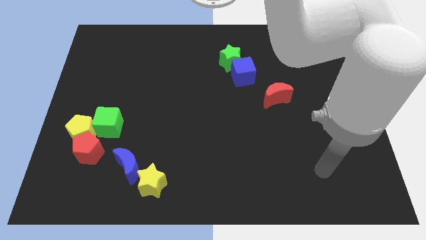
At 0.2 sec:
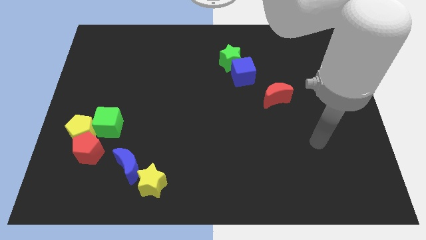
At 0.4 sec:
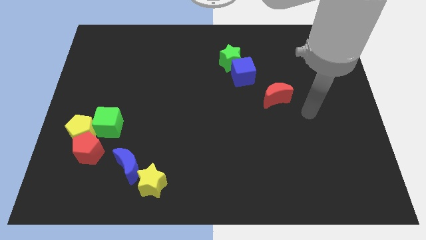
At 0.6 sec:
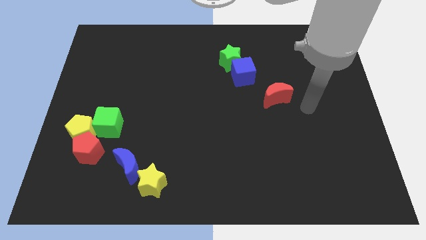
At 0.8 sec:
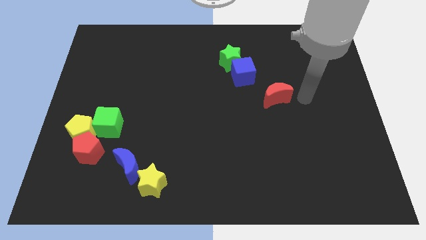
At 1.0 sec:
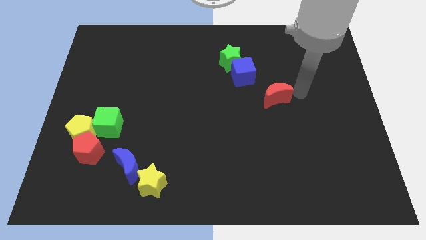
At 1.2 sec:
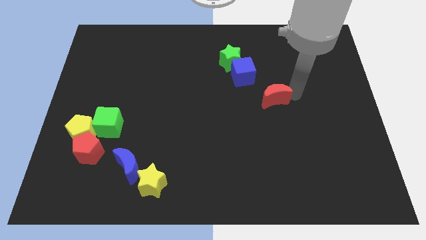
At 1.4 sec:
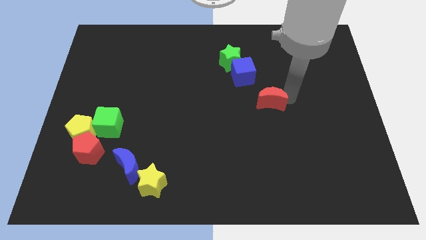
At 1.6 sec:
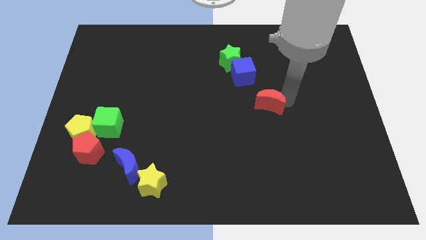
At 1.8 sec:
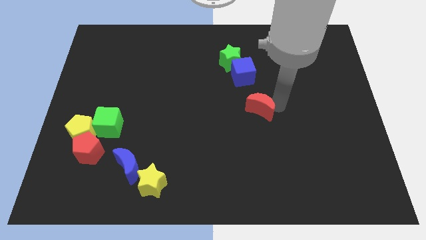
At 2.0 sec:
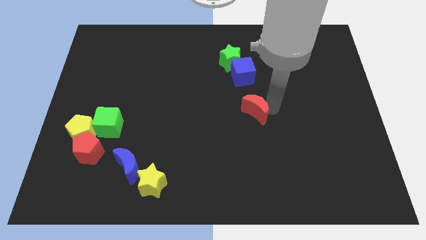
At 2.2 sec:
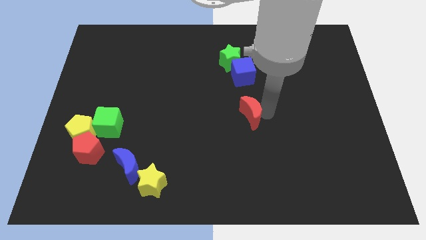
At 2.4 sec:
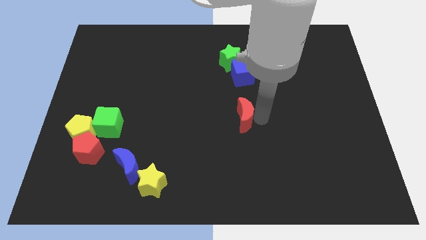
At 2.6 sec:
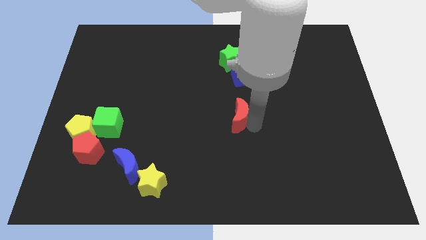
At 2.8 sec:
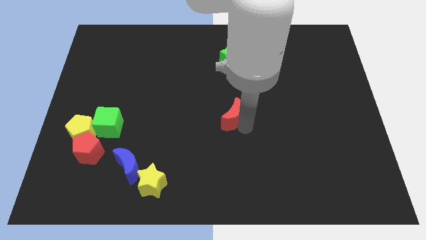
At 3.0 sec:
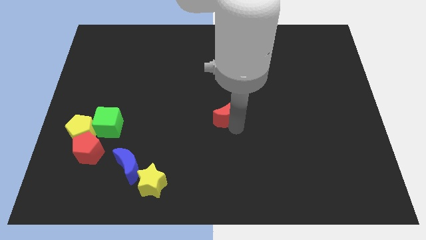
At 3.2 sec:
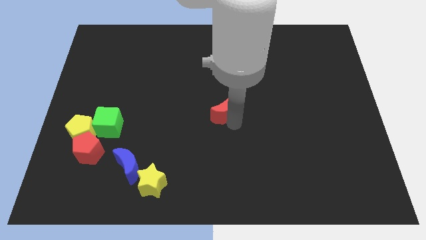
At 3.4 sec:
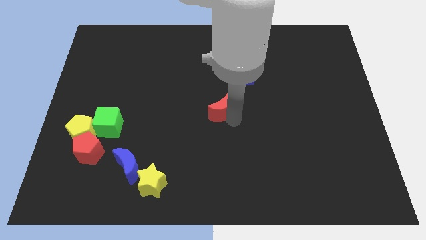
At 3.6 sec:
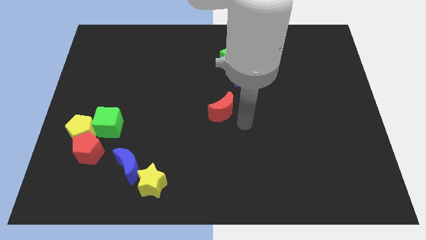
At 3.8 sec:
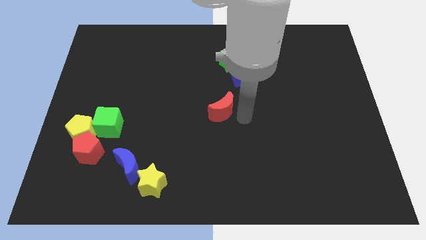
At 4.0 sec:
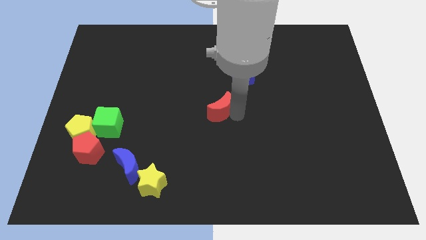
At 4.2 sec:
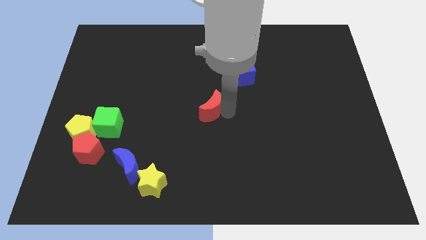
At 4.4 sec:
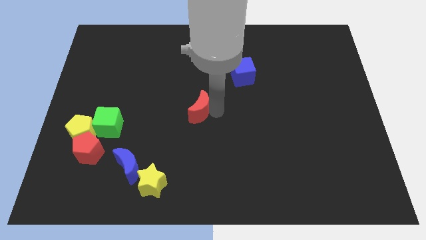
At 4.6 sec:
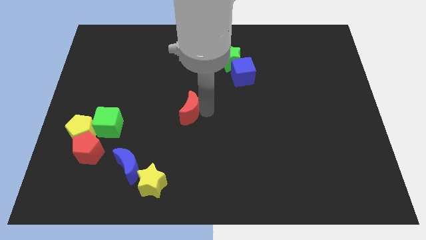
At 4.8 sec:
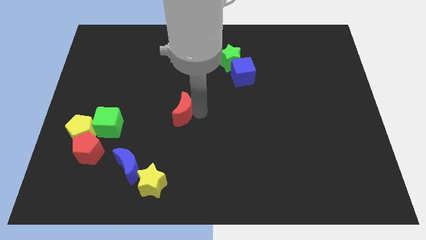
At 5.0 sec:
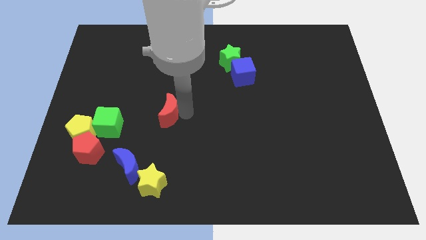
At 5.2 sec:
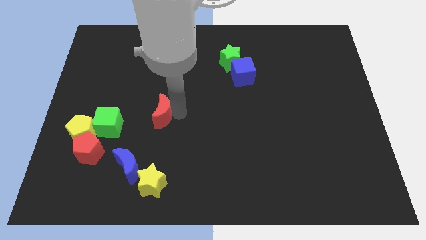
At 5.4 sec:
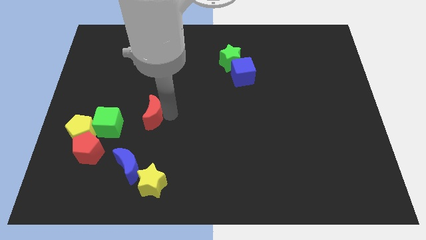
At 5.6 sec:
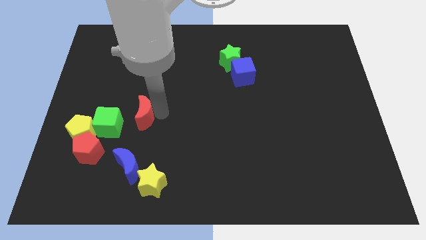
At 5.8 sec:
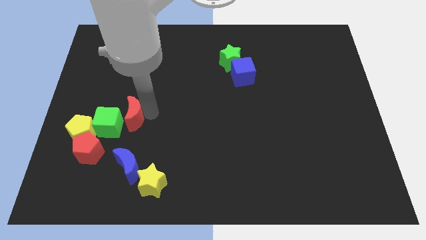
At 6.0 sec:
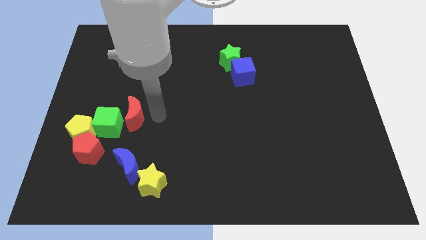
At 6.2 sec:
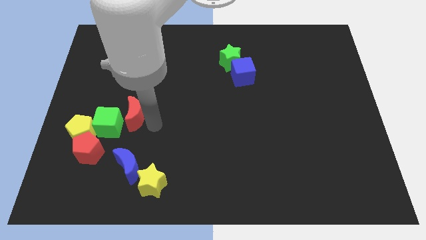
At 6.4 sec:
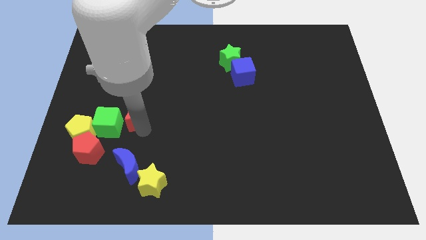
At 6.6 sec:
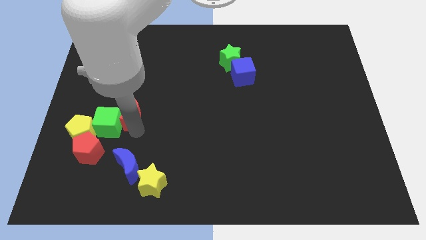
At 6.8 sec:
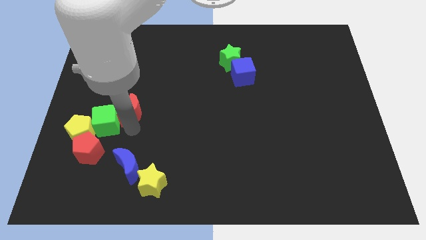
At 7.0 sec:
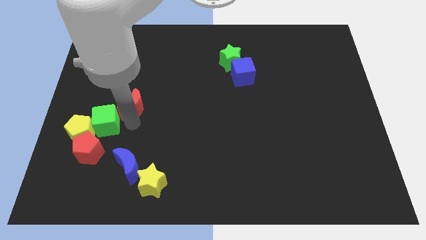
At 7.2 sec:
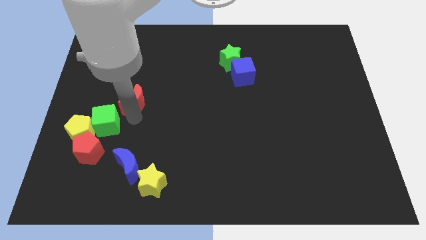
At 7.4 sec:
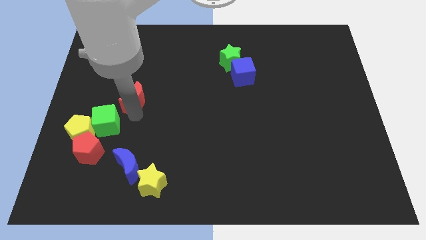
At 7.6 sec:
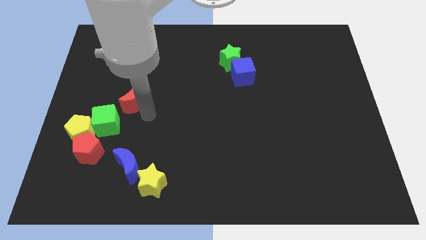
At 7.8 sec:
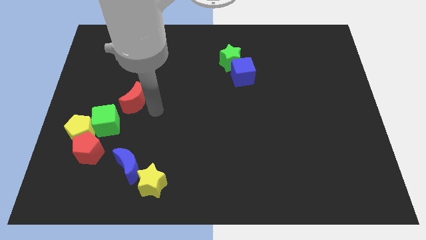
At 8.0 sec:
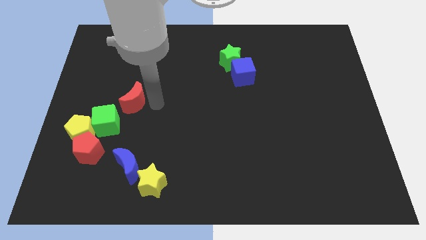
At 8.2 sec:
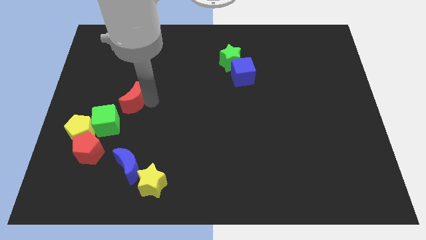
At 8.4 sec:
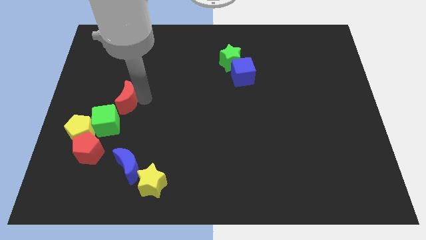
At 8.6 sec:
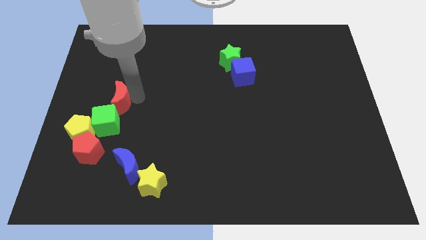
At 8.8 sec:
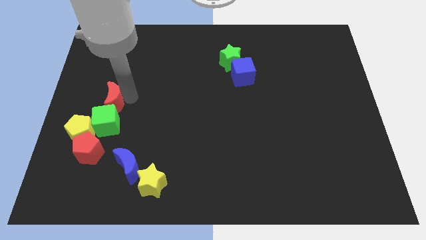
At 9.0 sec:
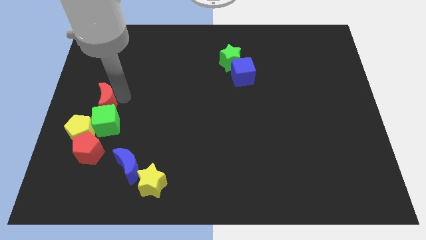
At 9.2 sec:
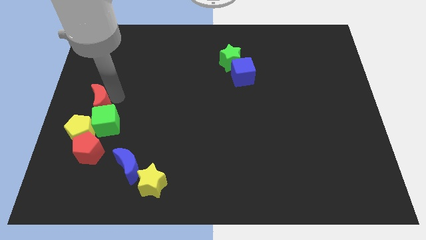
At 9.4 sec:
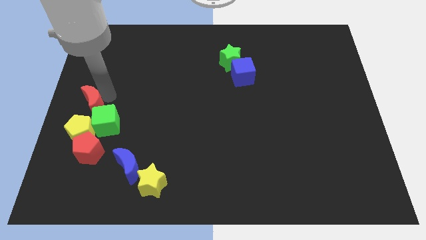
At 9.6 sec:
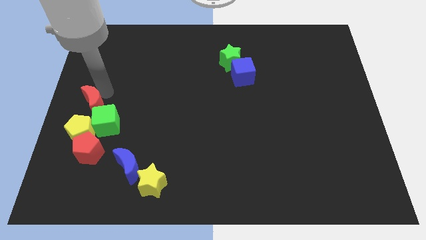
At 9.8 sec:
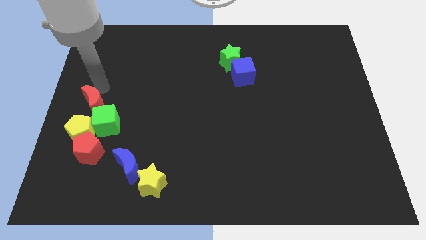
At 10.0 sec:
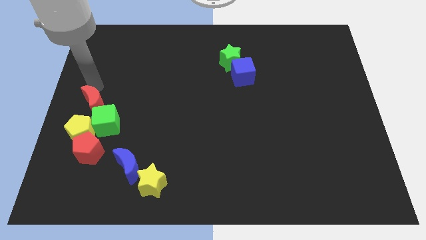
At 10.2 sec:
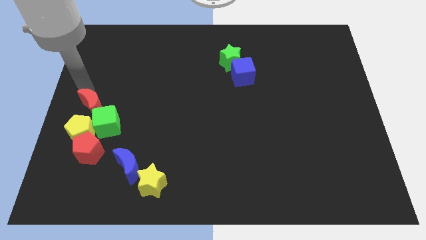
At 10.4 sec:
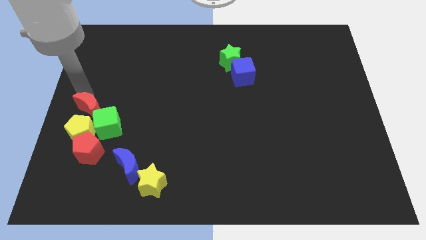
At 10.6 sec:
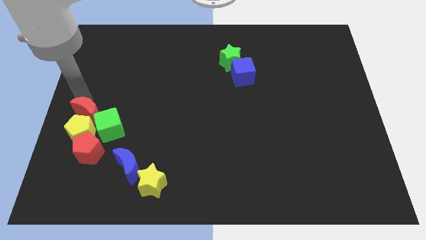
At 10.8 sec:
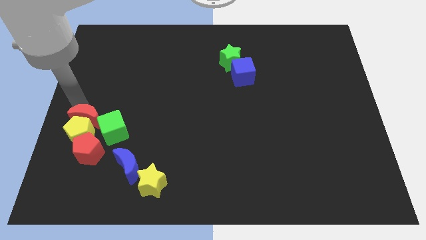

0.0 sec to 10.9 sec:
push the red moon close to the yellow pentagon

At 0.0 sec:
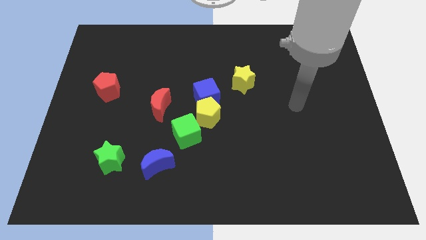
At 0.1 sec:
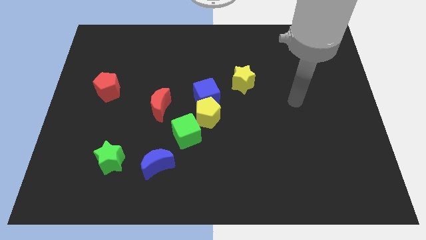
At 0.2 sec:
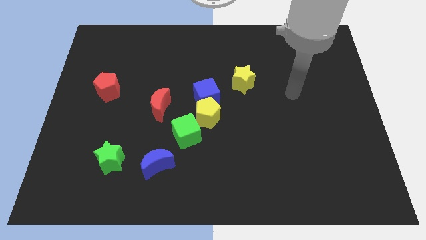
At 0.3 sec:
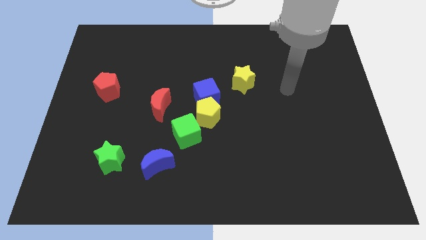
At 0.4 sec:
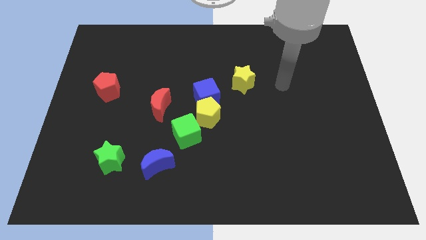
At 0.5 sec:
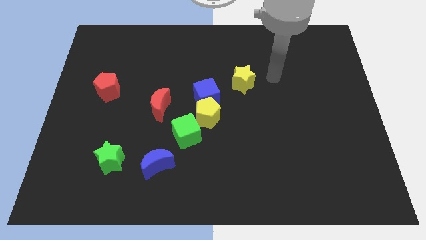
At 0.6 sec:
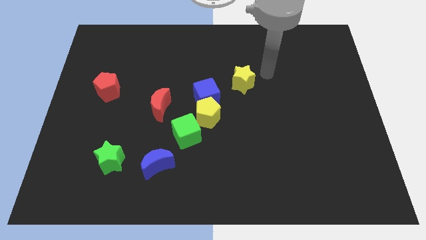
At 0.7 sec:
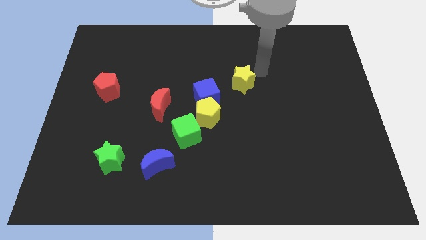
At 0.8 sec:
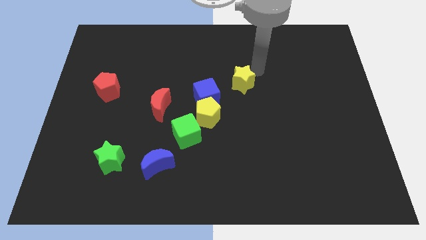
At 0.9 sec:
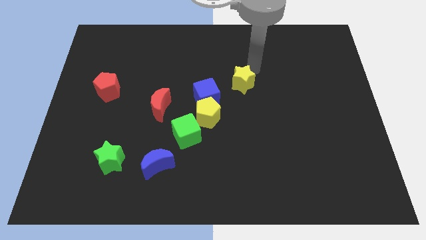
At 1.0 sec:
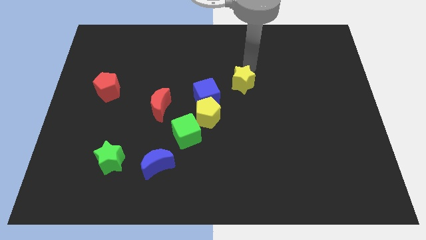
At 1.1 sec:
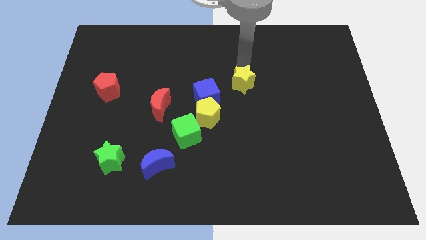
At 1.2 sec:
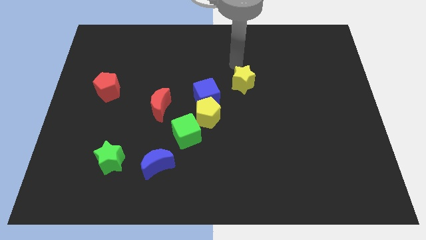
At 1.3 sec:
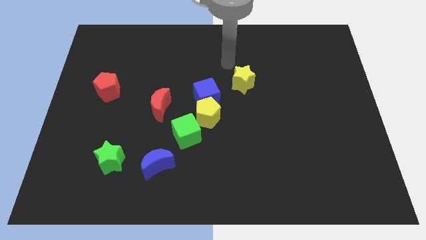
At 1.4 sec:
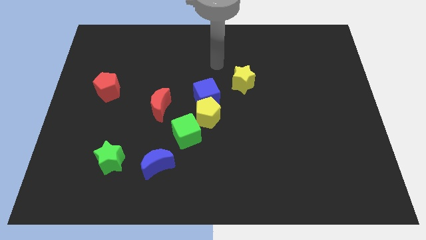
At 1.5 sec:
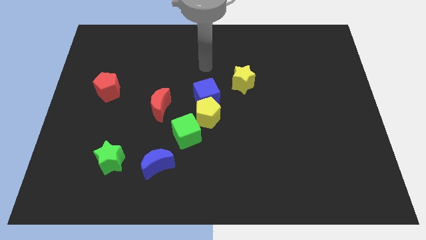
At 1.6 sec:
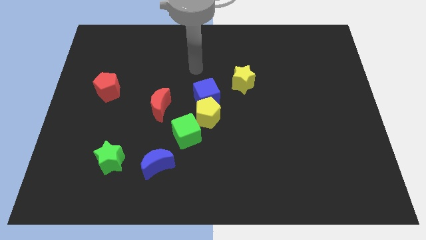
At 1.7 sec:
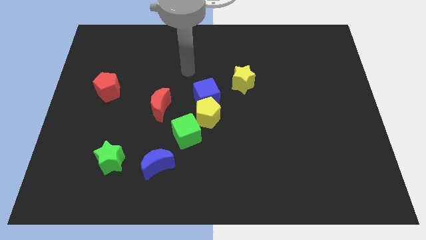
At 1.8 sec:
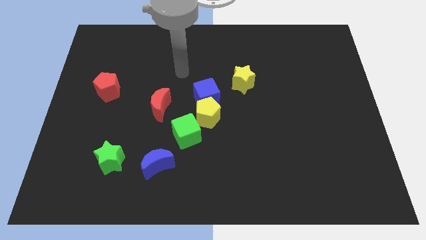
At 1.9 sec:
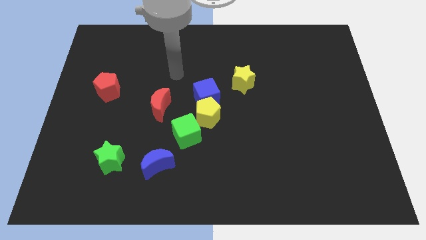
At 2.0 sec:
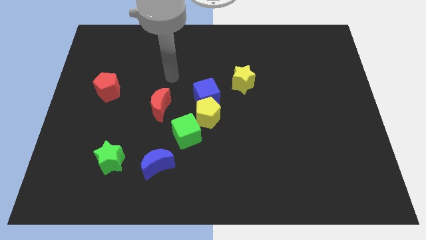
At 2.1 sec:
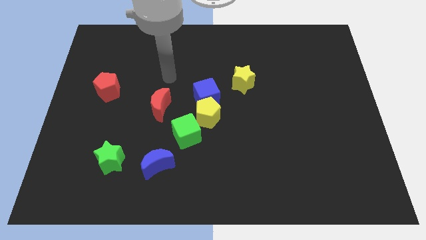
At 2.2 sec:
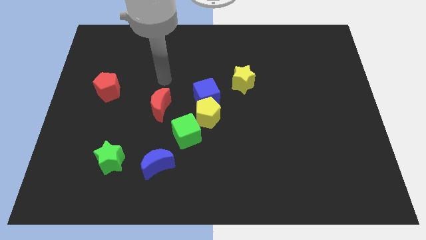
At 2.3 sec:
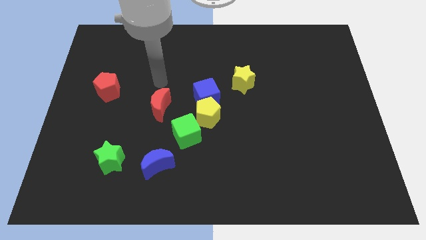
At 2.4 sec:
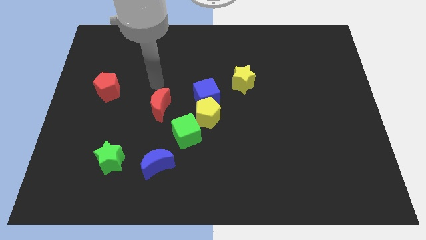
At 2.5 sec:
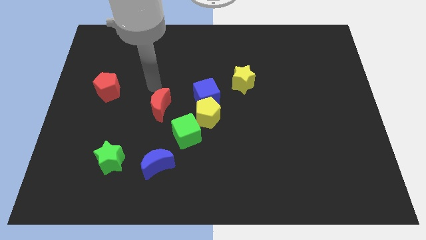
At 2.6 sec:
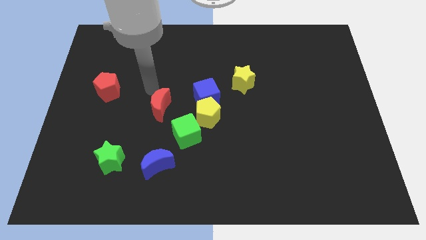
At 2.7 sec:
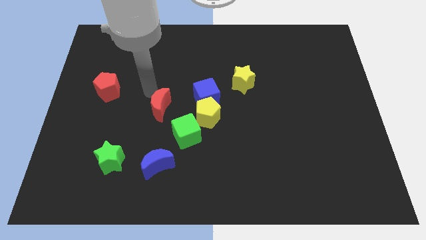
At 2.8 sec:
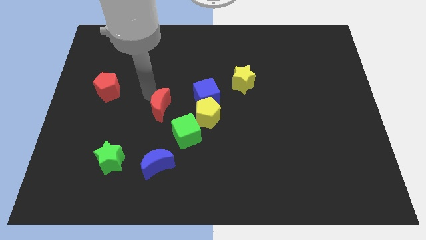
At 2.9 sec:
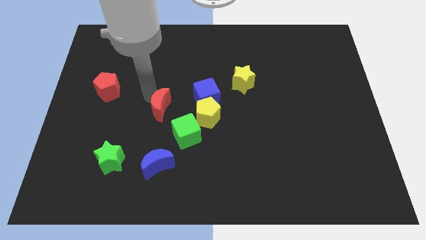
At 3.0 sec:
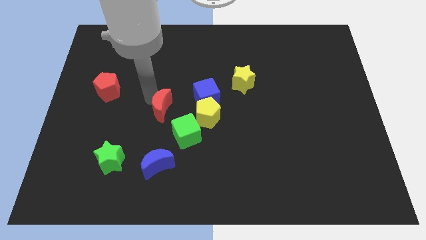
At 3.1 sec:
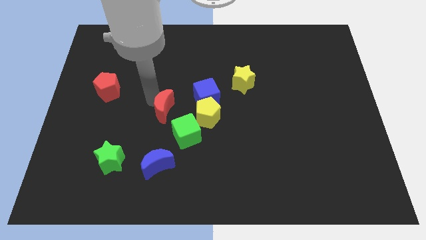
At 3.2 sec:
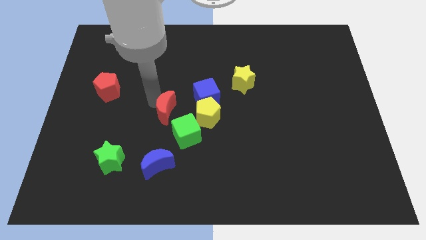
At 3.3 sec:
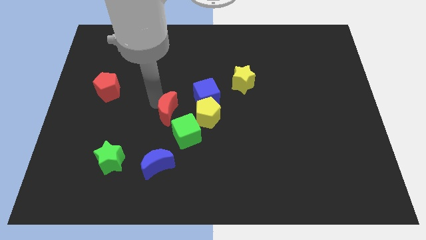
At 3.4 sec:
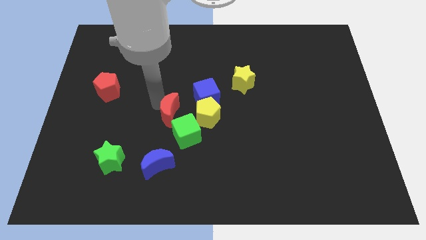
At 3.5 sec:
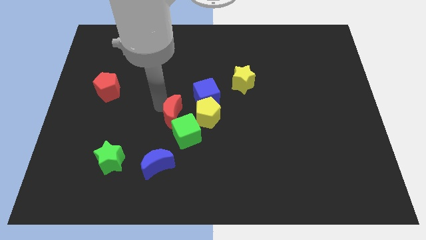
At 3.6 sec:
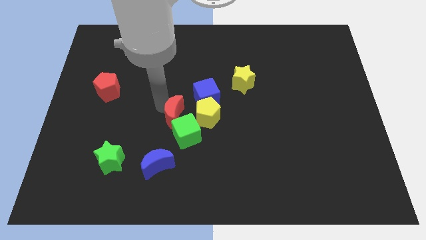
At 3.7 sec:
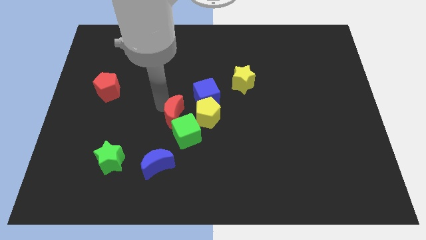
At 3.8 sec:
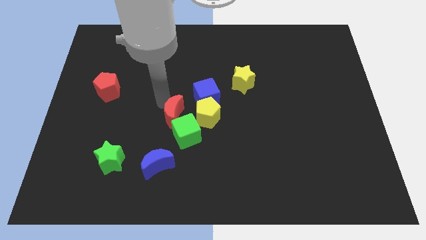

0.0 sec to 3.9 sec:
move the red moon towards the green cube
